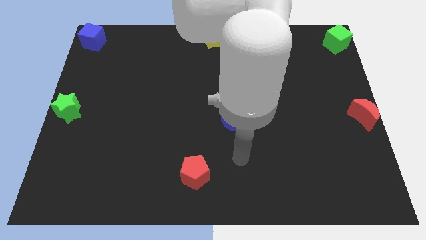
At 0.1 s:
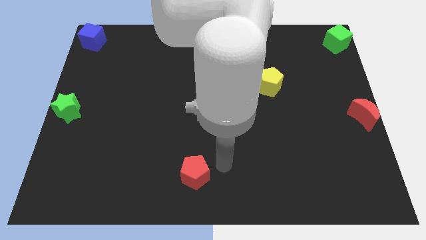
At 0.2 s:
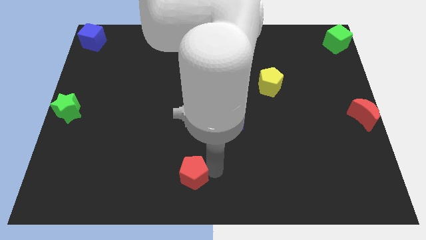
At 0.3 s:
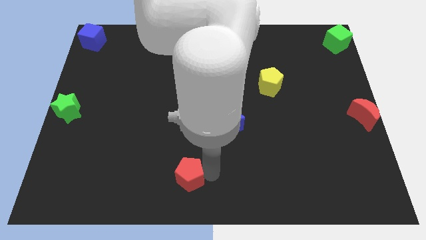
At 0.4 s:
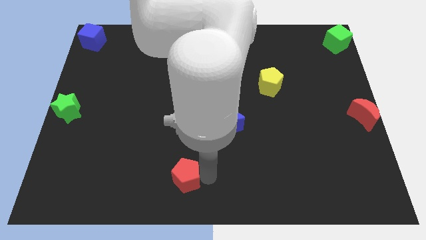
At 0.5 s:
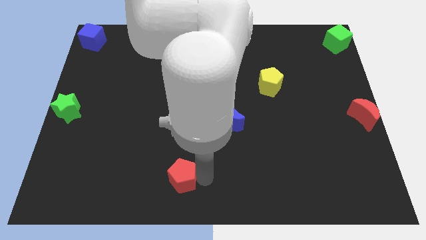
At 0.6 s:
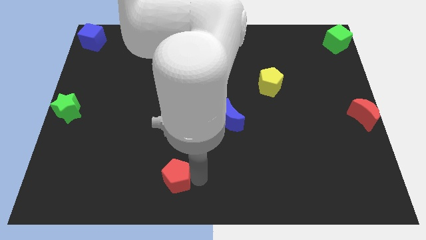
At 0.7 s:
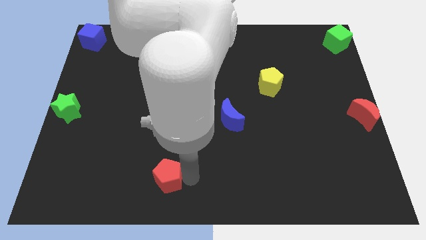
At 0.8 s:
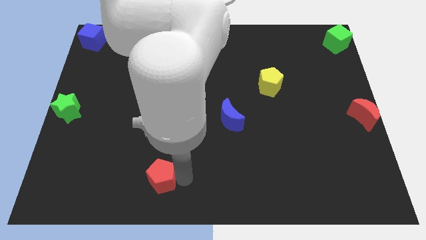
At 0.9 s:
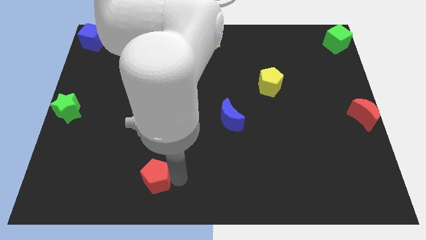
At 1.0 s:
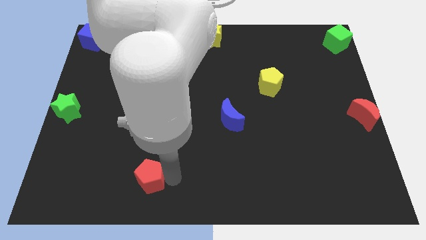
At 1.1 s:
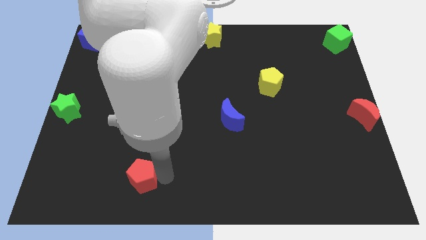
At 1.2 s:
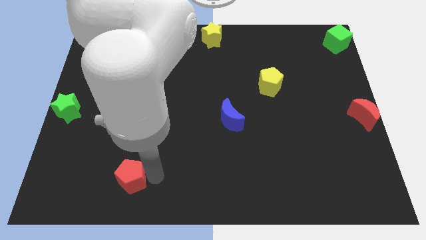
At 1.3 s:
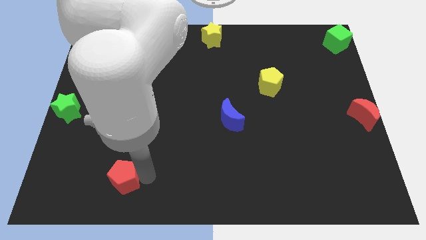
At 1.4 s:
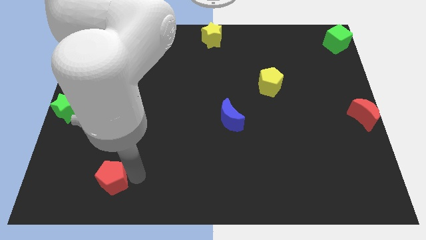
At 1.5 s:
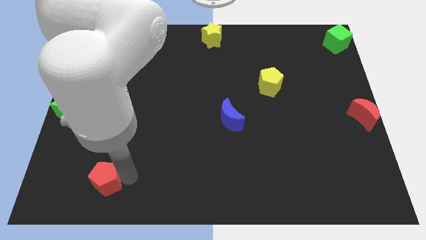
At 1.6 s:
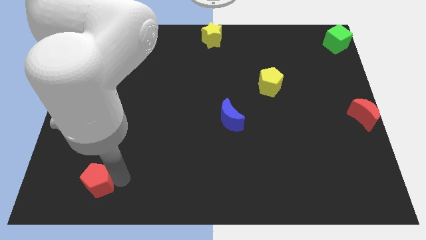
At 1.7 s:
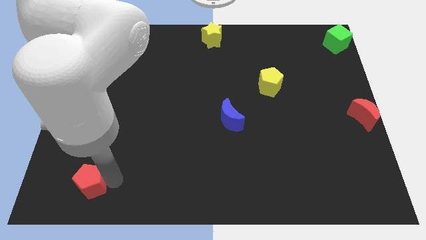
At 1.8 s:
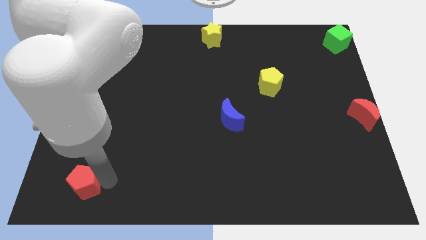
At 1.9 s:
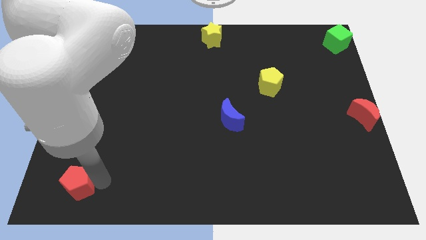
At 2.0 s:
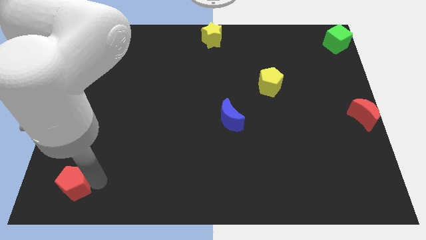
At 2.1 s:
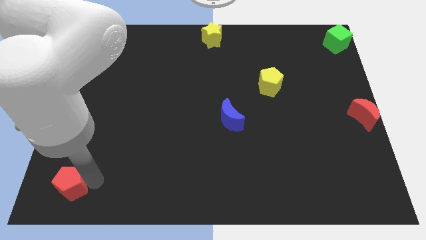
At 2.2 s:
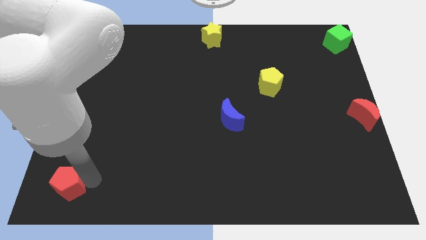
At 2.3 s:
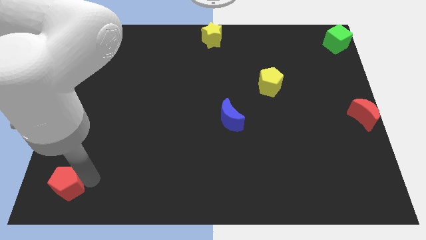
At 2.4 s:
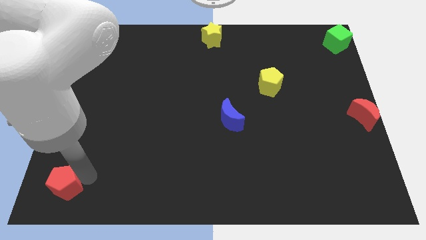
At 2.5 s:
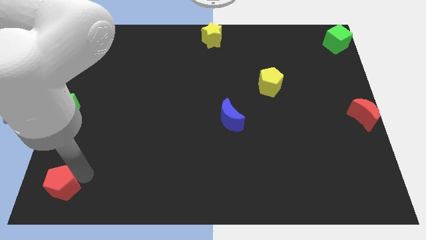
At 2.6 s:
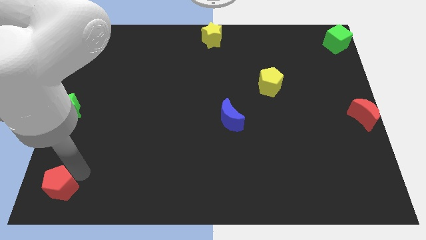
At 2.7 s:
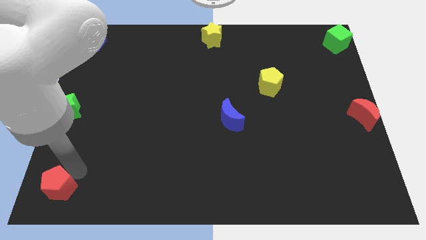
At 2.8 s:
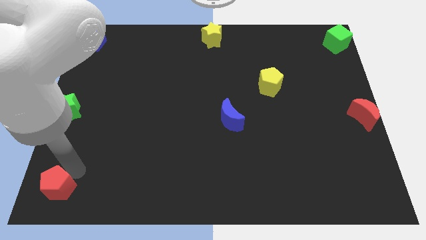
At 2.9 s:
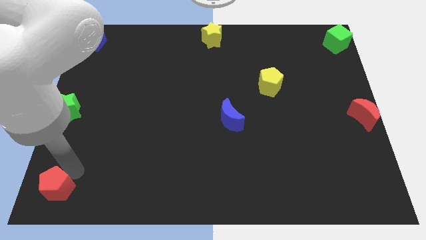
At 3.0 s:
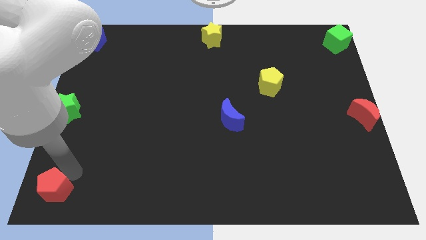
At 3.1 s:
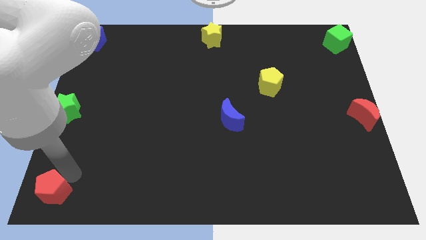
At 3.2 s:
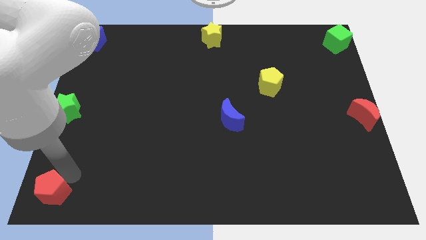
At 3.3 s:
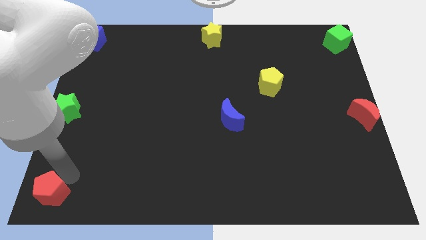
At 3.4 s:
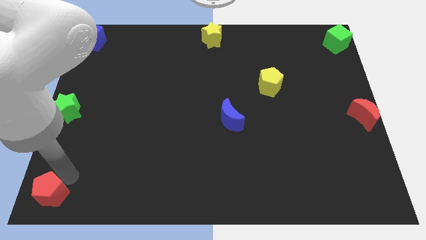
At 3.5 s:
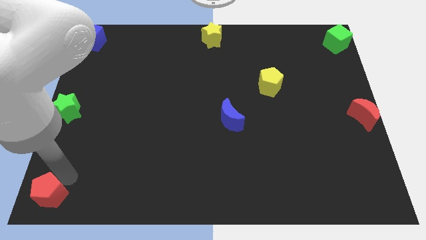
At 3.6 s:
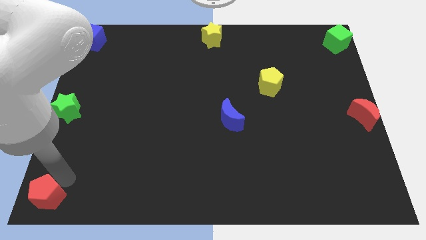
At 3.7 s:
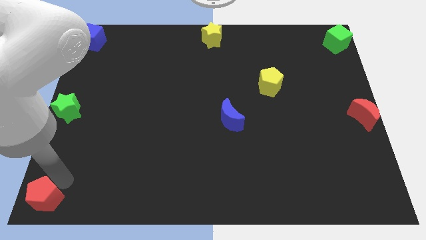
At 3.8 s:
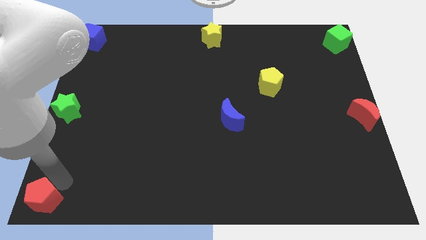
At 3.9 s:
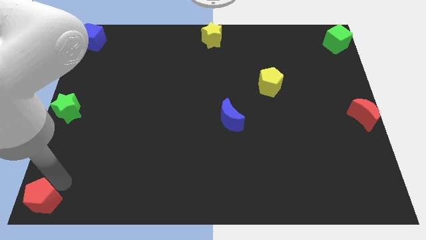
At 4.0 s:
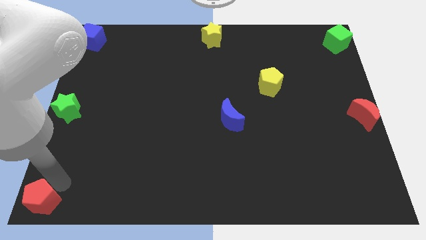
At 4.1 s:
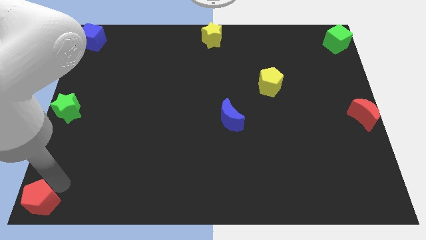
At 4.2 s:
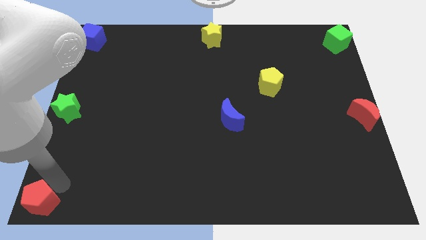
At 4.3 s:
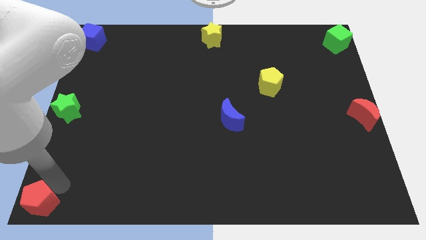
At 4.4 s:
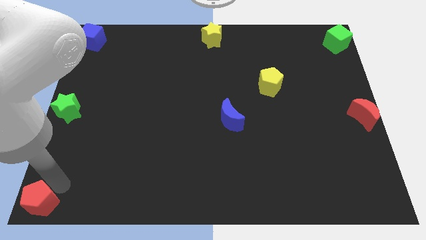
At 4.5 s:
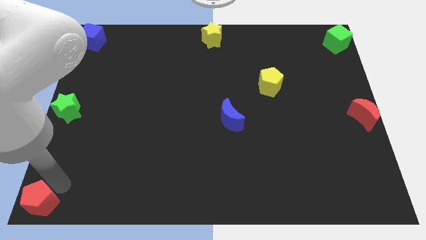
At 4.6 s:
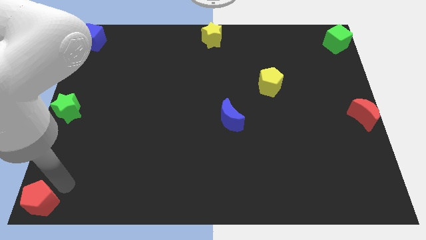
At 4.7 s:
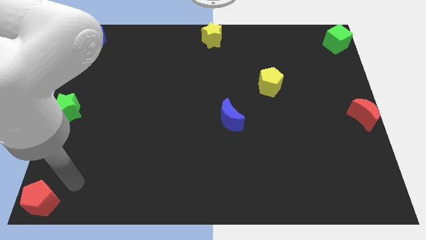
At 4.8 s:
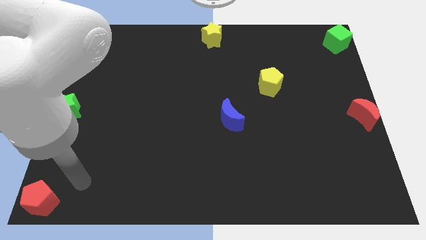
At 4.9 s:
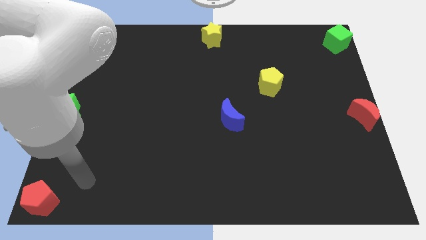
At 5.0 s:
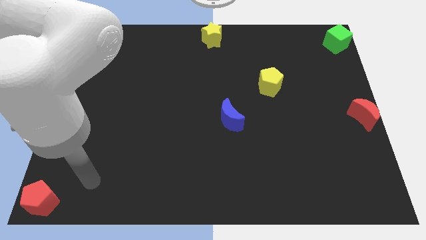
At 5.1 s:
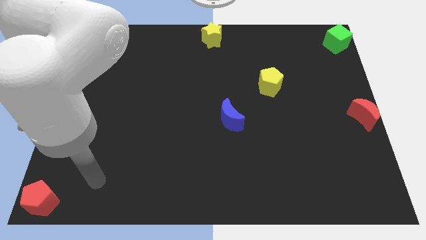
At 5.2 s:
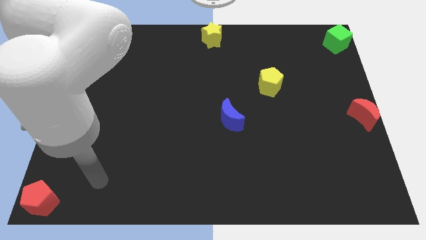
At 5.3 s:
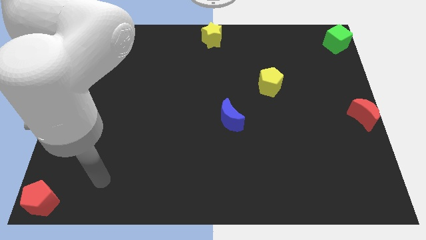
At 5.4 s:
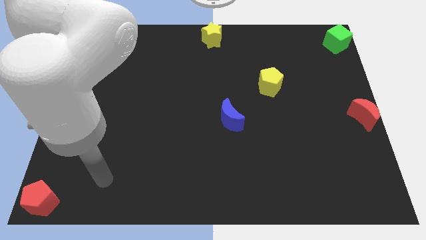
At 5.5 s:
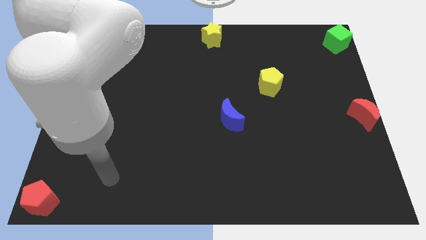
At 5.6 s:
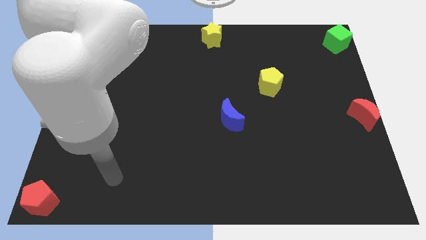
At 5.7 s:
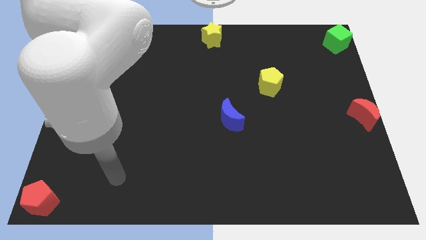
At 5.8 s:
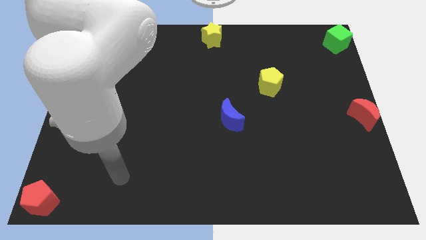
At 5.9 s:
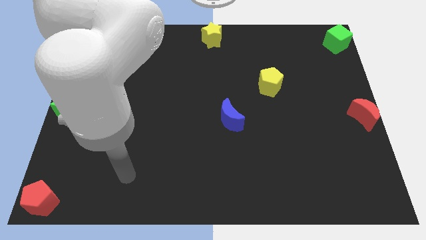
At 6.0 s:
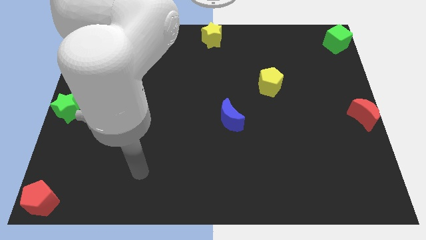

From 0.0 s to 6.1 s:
move the red pentagon to the bottom left corner

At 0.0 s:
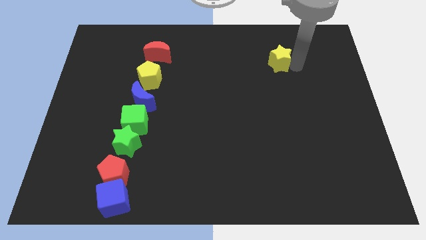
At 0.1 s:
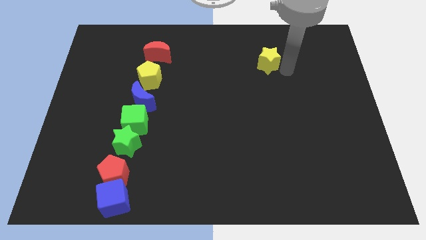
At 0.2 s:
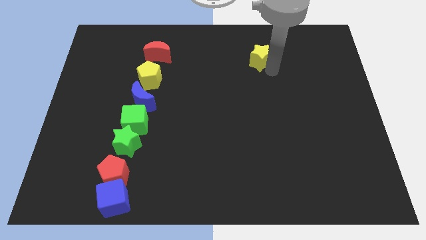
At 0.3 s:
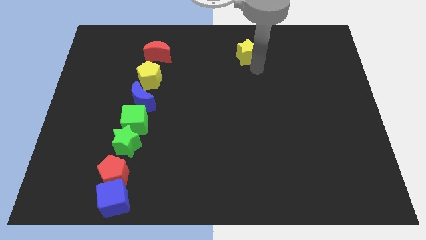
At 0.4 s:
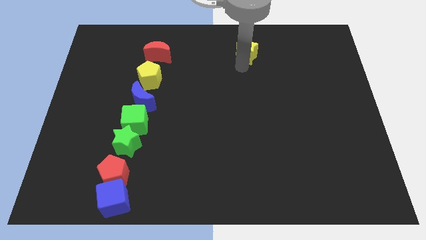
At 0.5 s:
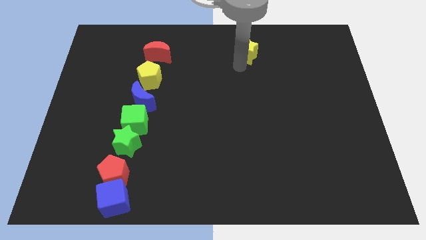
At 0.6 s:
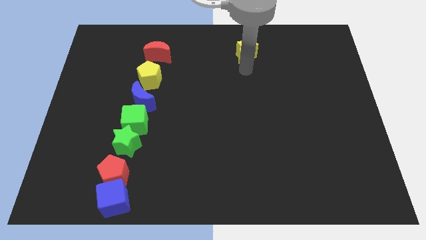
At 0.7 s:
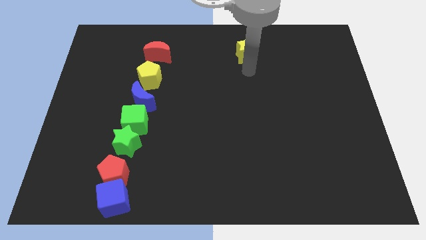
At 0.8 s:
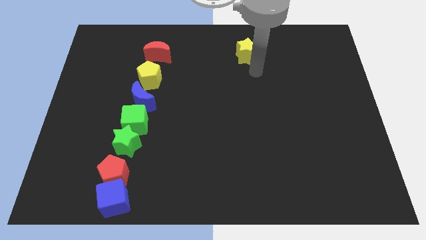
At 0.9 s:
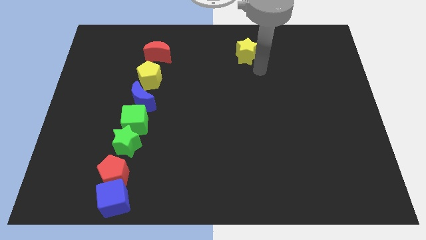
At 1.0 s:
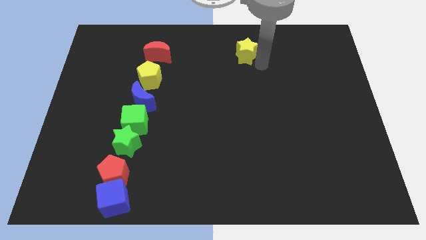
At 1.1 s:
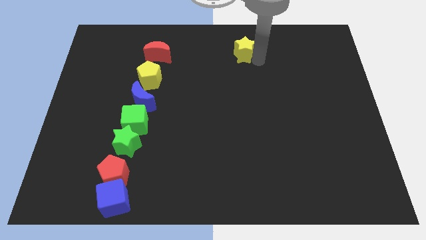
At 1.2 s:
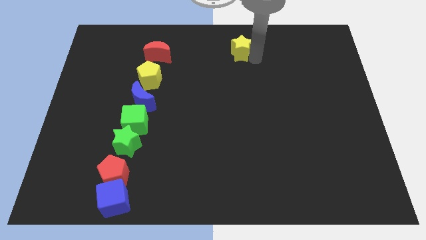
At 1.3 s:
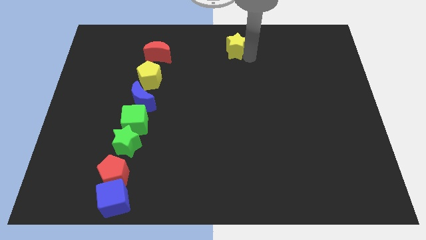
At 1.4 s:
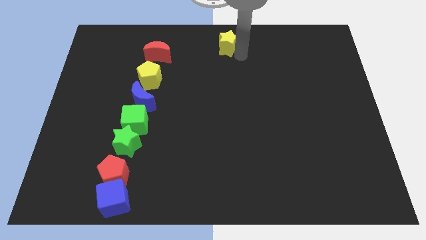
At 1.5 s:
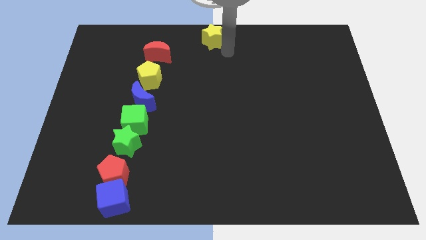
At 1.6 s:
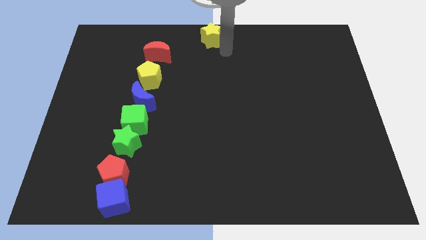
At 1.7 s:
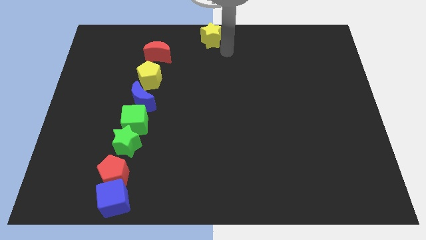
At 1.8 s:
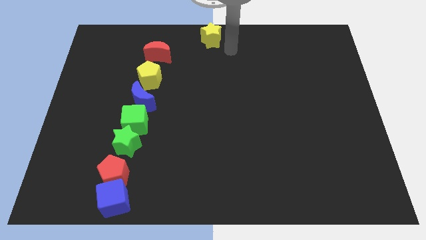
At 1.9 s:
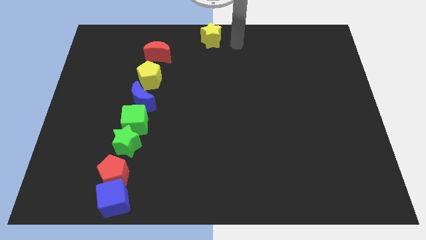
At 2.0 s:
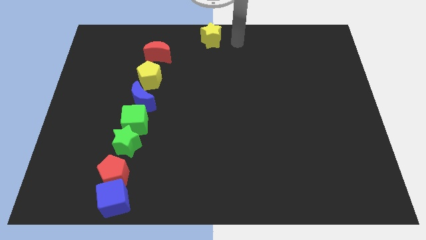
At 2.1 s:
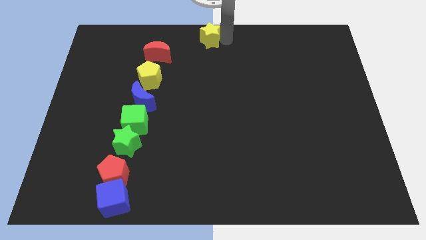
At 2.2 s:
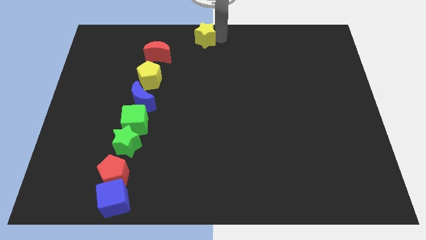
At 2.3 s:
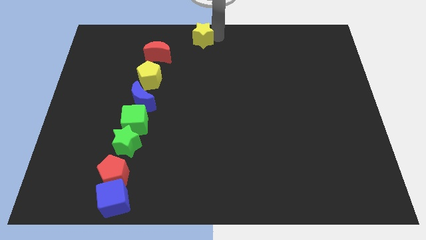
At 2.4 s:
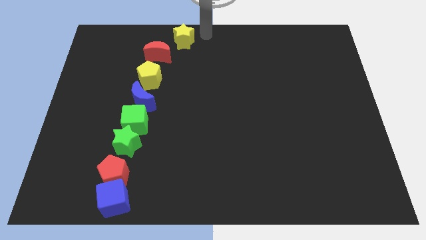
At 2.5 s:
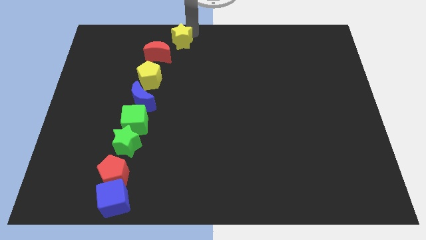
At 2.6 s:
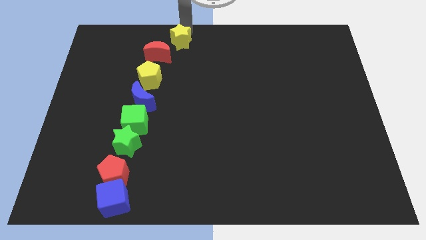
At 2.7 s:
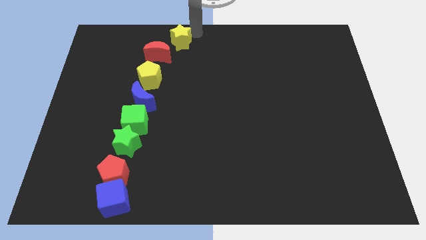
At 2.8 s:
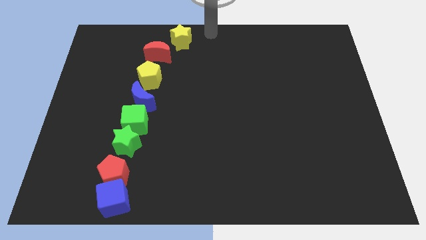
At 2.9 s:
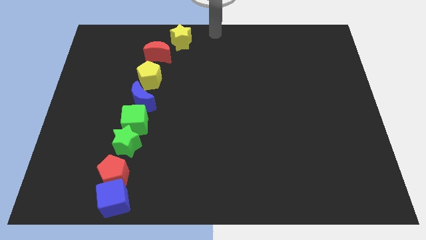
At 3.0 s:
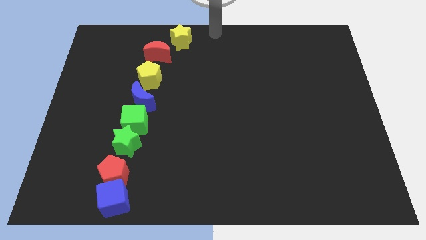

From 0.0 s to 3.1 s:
slide yellow star to the top right of red moon
